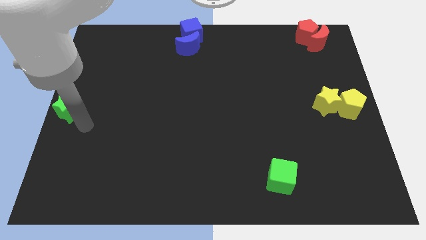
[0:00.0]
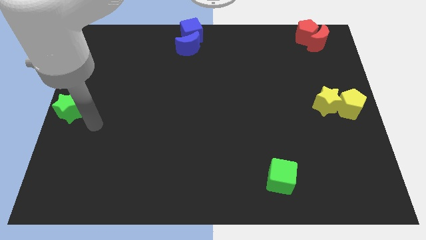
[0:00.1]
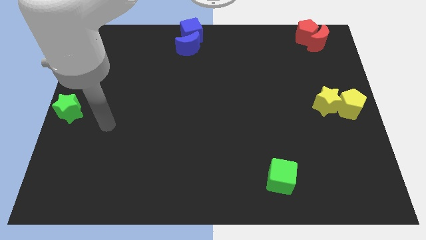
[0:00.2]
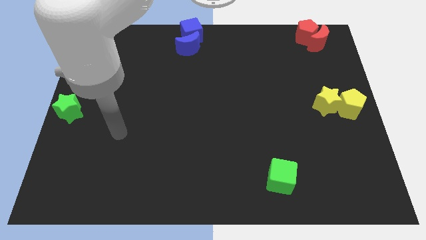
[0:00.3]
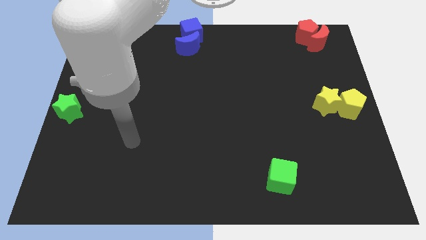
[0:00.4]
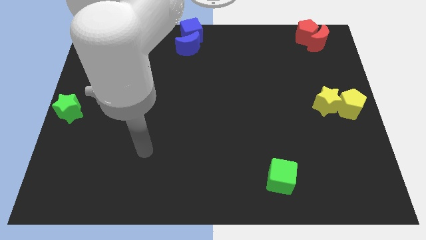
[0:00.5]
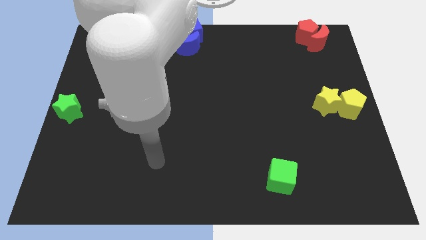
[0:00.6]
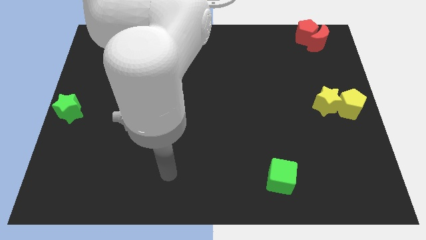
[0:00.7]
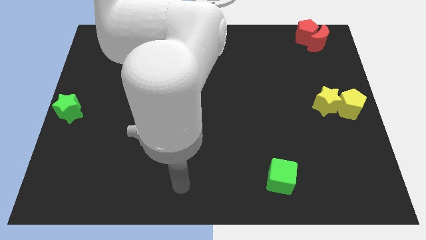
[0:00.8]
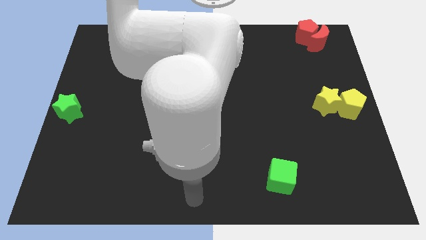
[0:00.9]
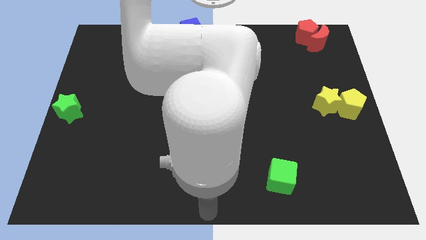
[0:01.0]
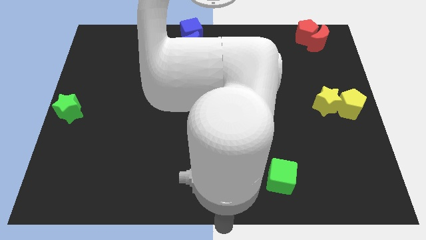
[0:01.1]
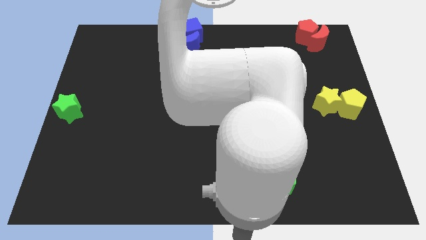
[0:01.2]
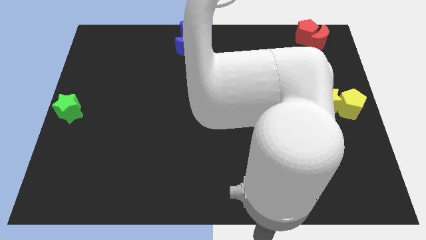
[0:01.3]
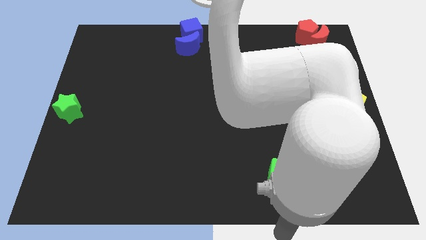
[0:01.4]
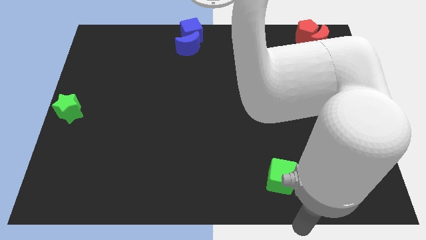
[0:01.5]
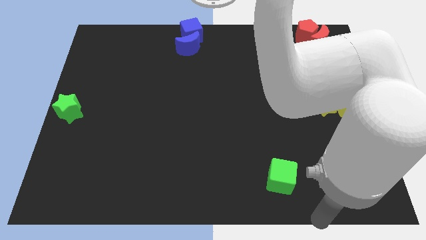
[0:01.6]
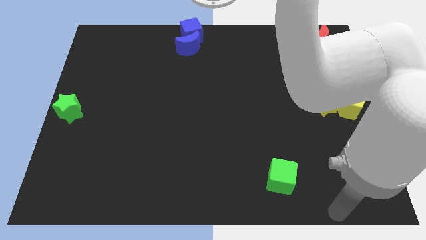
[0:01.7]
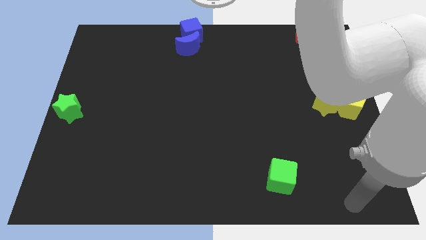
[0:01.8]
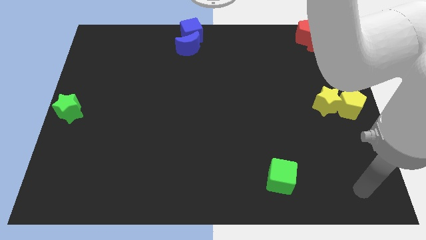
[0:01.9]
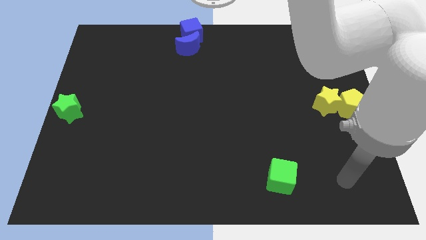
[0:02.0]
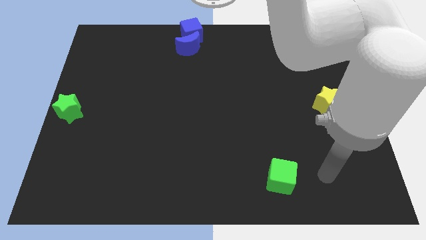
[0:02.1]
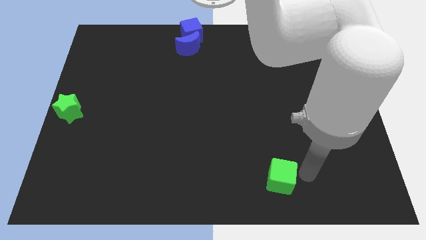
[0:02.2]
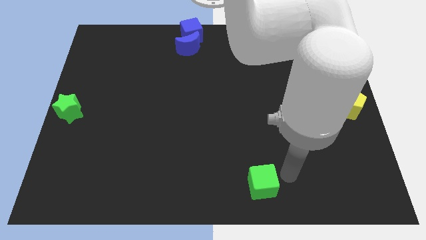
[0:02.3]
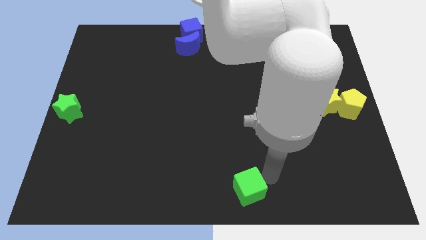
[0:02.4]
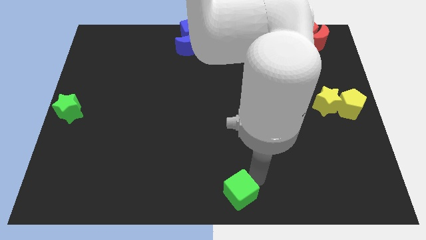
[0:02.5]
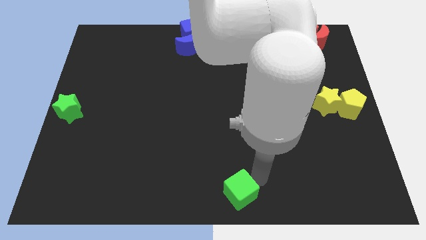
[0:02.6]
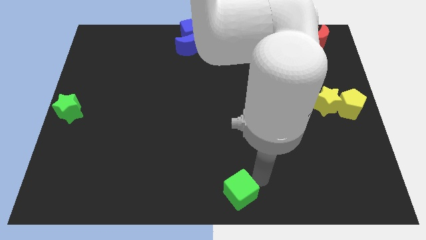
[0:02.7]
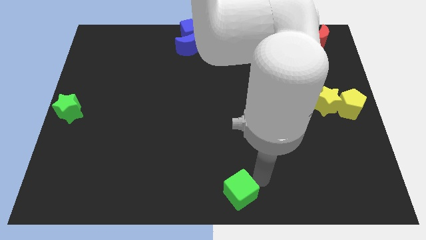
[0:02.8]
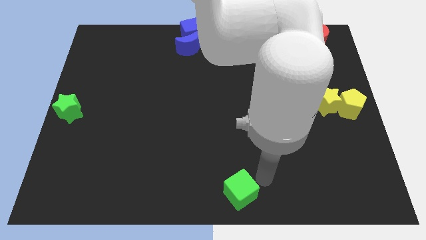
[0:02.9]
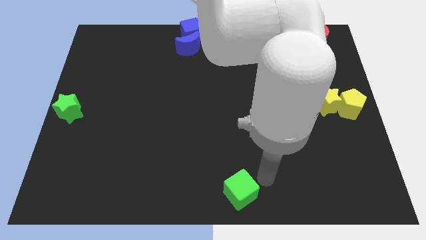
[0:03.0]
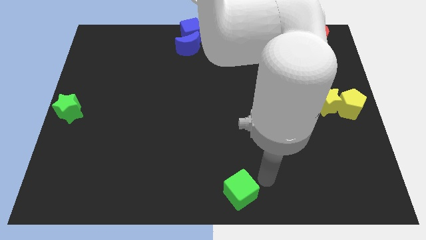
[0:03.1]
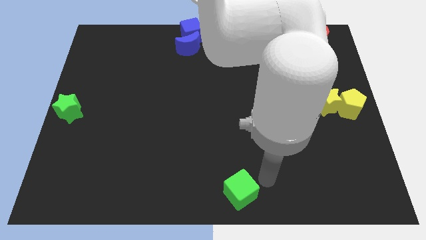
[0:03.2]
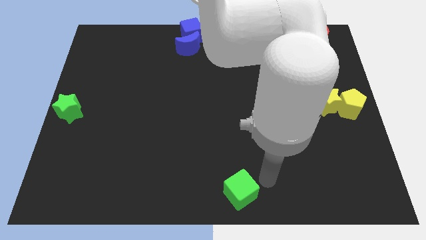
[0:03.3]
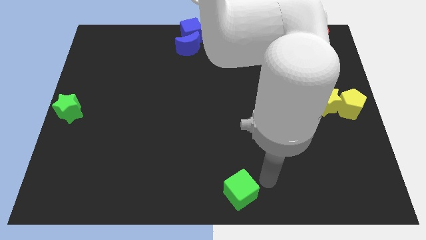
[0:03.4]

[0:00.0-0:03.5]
move the arm right to the green cube

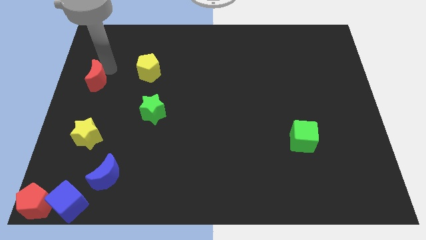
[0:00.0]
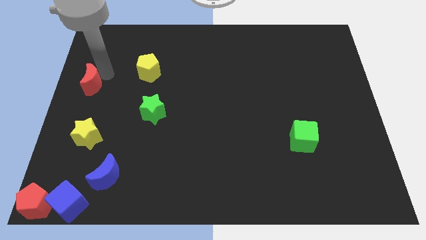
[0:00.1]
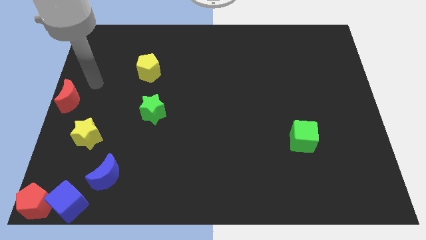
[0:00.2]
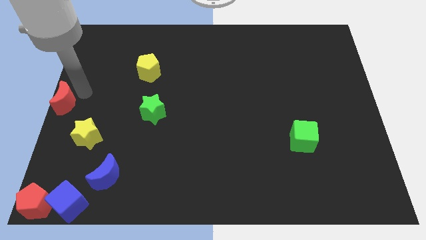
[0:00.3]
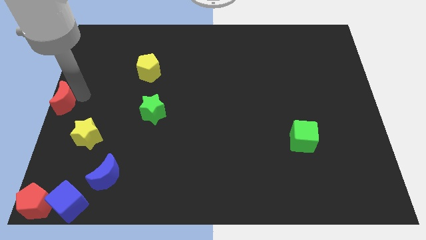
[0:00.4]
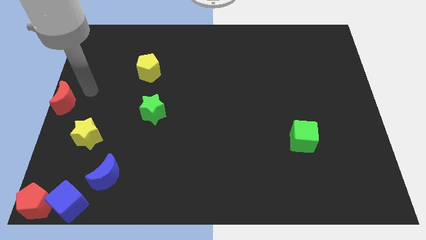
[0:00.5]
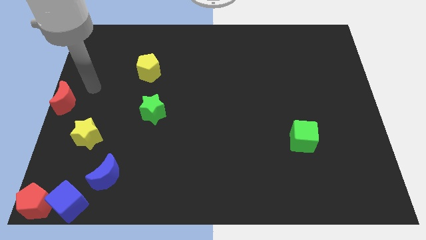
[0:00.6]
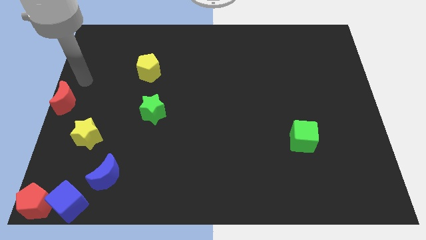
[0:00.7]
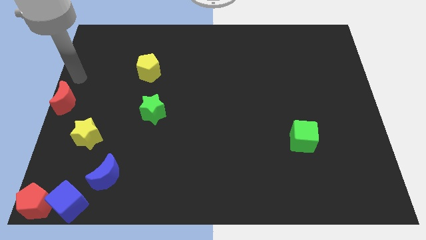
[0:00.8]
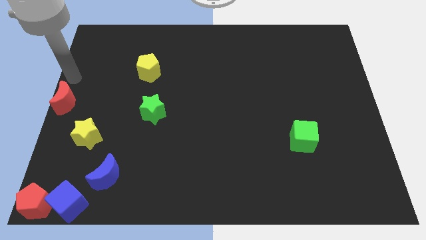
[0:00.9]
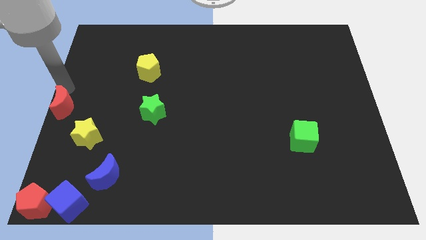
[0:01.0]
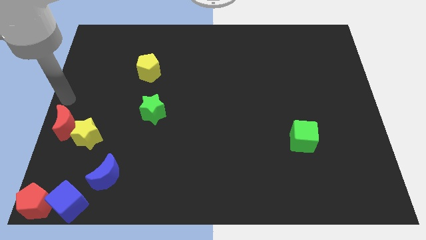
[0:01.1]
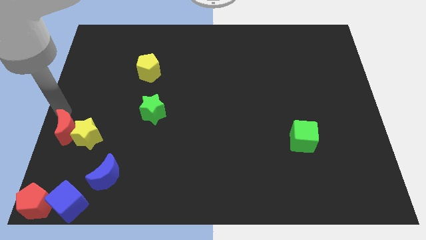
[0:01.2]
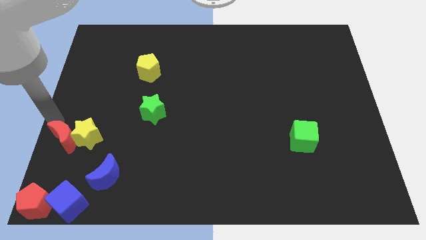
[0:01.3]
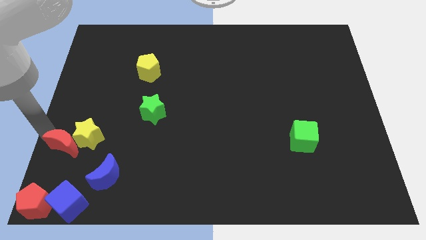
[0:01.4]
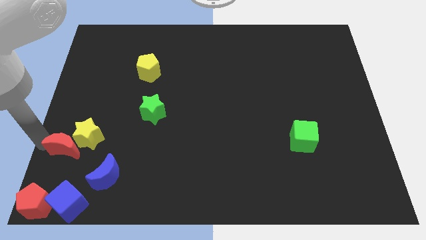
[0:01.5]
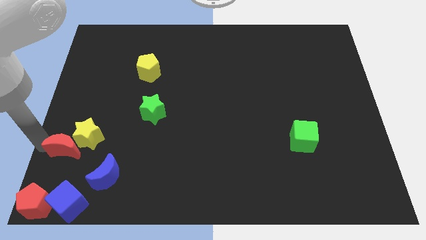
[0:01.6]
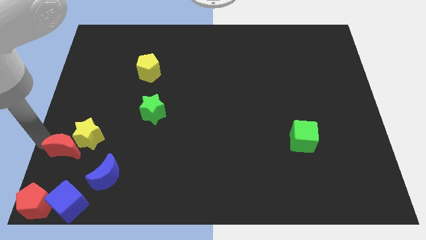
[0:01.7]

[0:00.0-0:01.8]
push the red moon into the yellow star

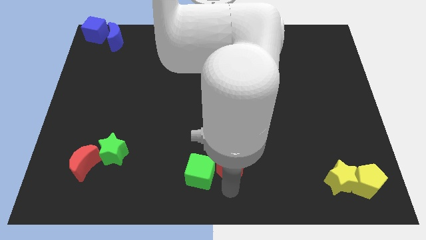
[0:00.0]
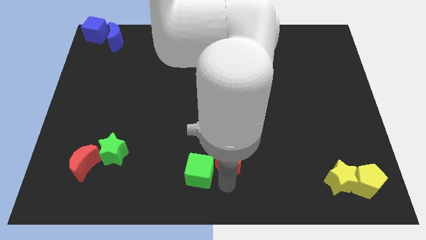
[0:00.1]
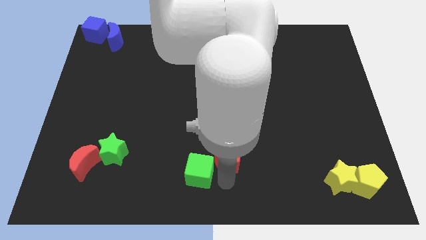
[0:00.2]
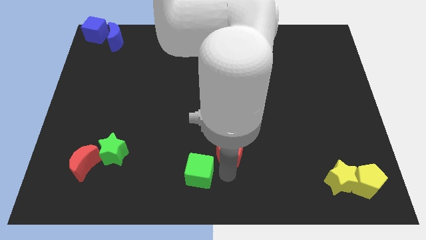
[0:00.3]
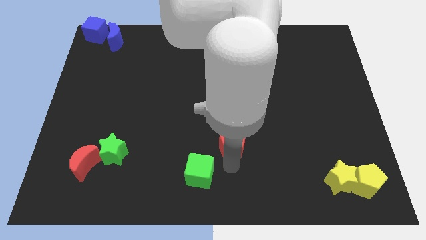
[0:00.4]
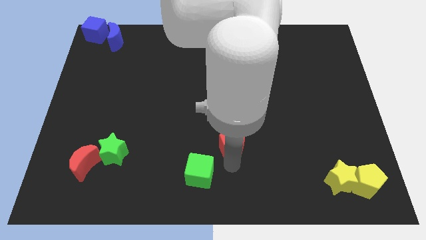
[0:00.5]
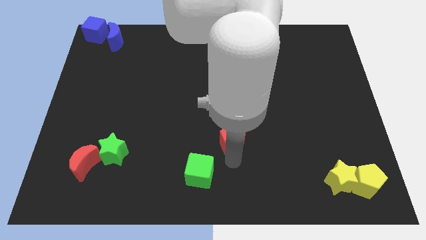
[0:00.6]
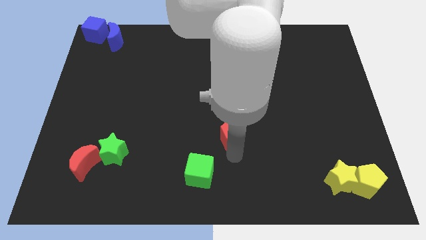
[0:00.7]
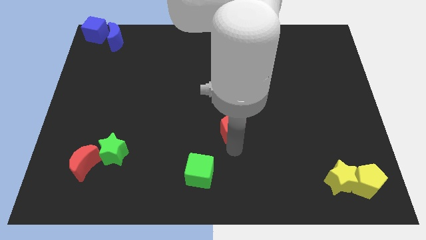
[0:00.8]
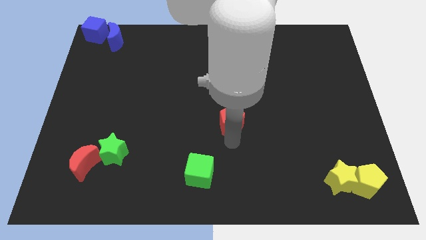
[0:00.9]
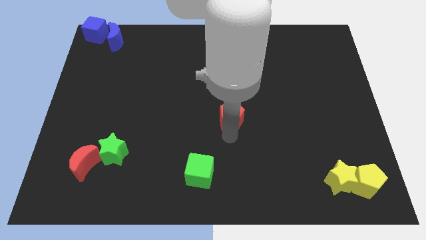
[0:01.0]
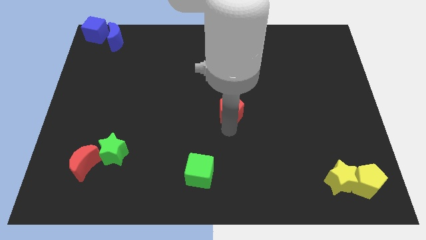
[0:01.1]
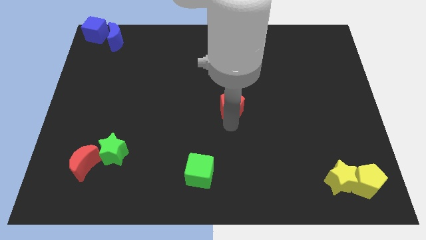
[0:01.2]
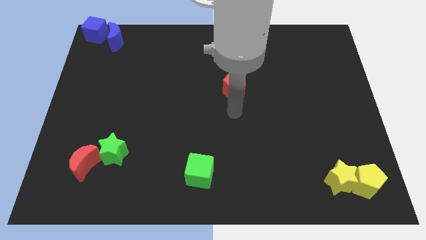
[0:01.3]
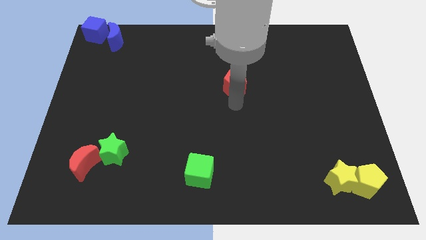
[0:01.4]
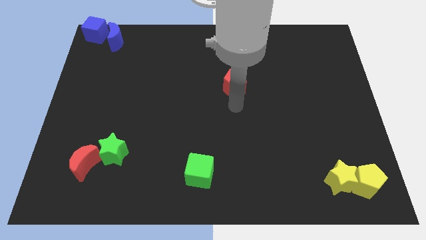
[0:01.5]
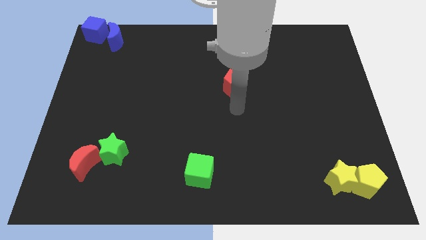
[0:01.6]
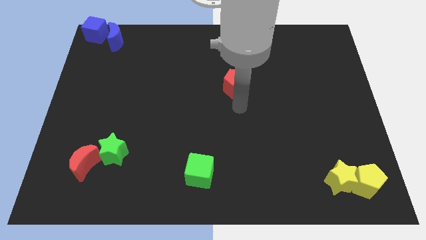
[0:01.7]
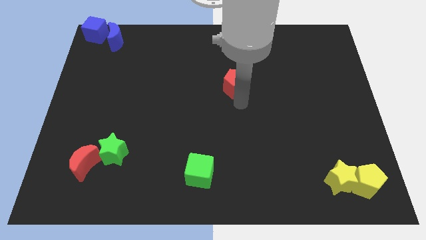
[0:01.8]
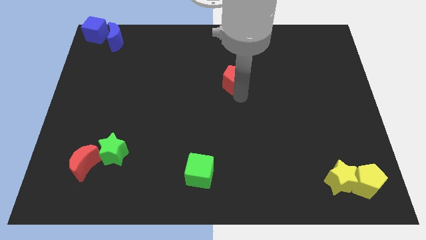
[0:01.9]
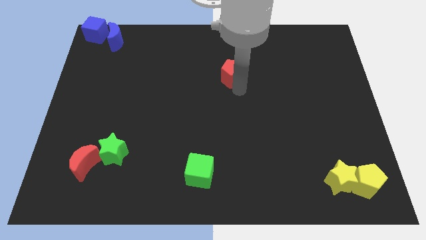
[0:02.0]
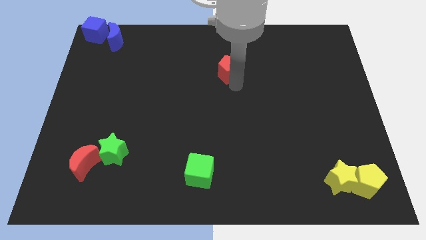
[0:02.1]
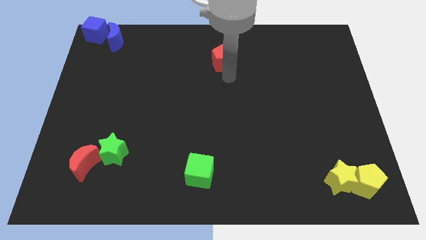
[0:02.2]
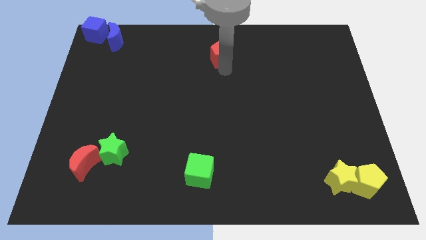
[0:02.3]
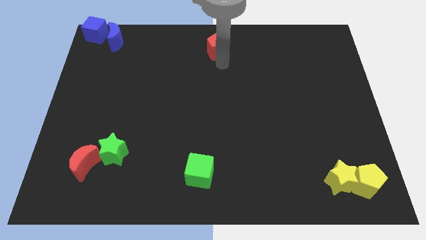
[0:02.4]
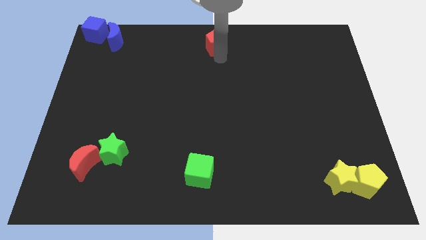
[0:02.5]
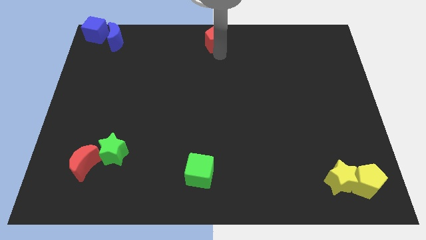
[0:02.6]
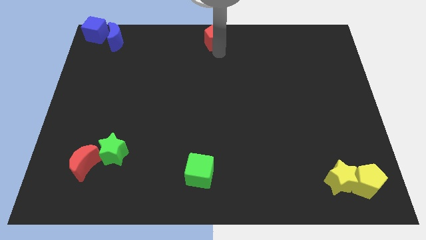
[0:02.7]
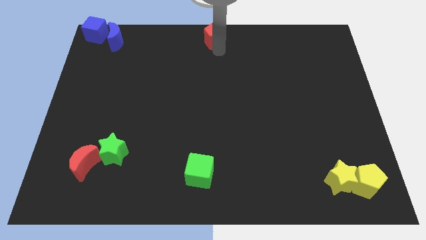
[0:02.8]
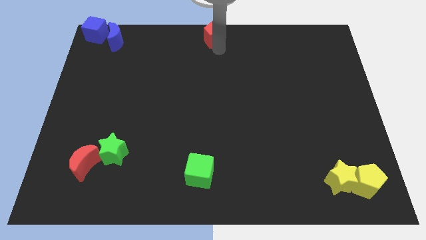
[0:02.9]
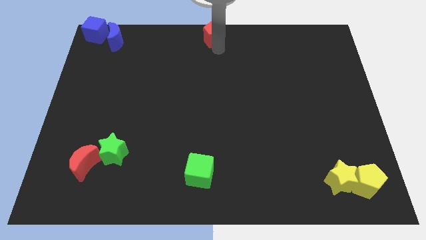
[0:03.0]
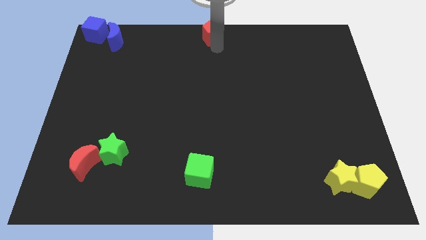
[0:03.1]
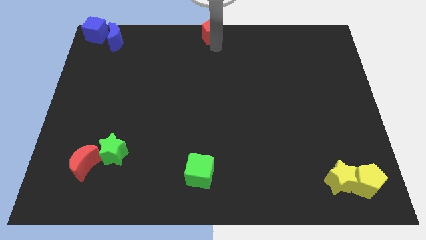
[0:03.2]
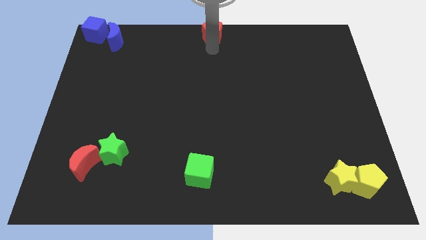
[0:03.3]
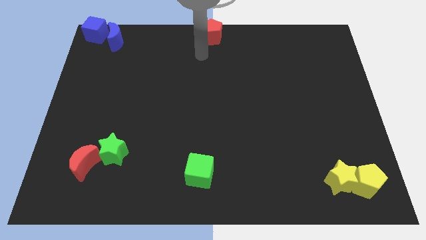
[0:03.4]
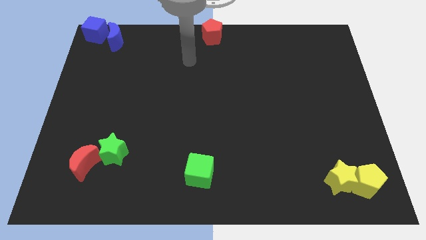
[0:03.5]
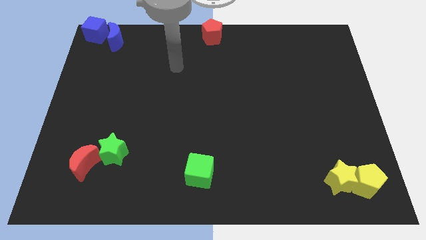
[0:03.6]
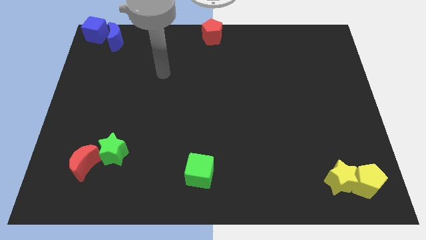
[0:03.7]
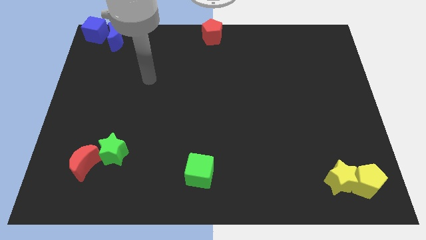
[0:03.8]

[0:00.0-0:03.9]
move the red pentagon to the top middle of the board
